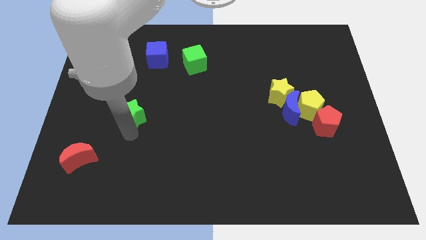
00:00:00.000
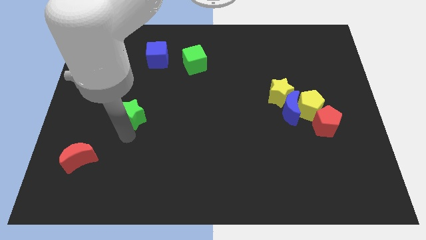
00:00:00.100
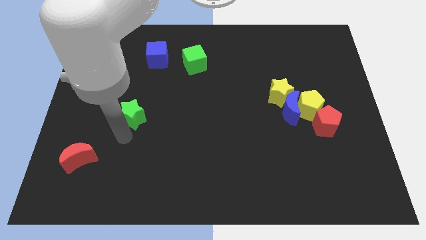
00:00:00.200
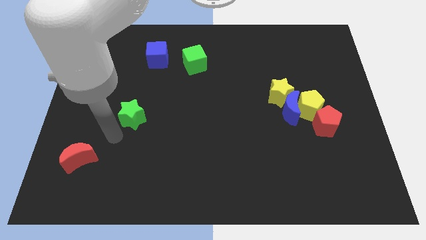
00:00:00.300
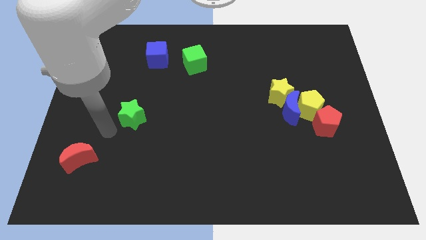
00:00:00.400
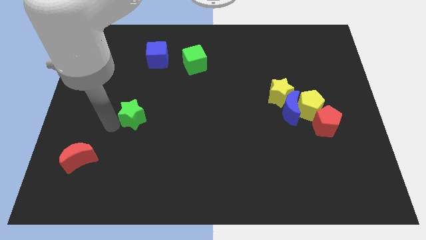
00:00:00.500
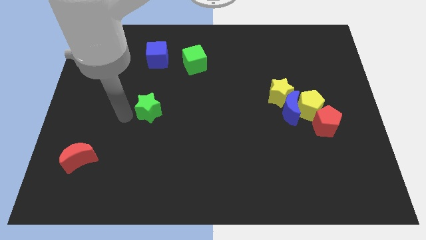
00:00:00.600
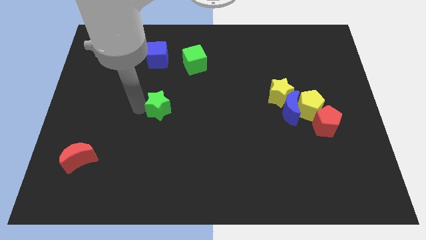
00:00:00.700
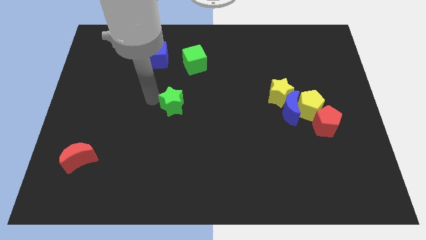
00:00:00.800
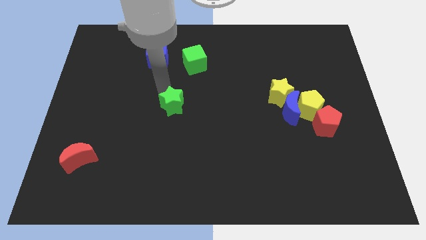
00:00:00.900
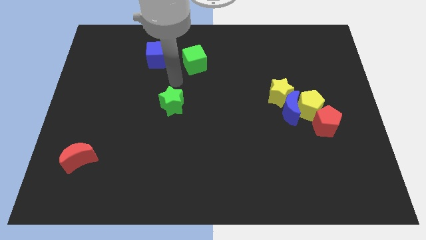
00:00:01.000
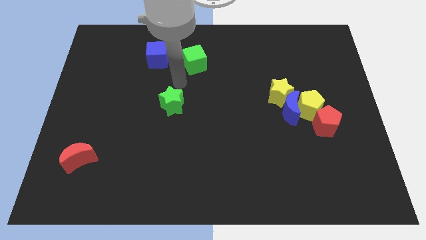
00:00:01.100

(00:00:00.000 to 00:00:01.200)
slightly move the green star to the center right side

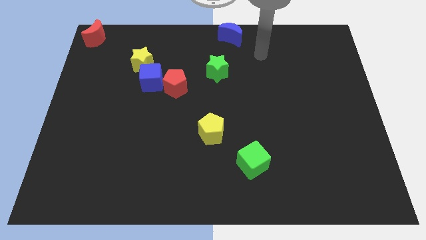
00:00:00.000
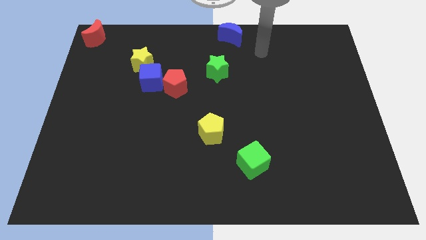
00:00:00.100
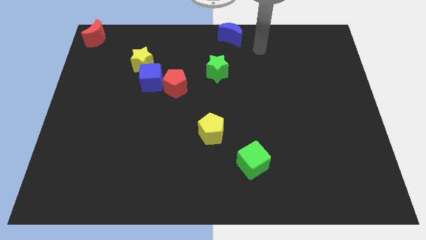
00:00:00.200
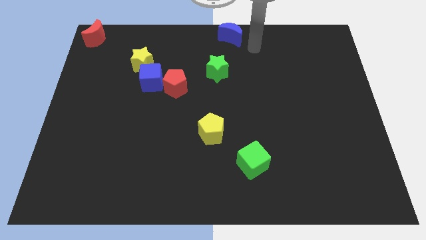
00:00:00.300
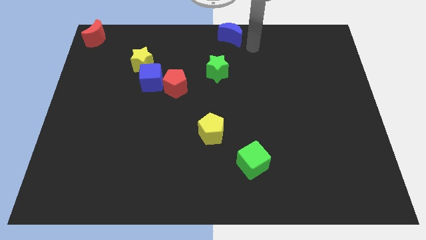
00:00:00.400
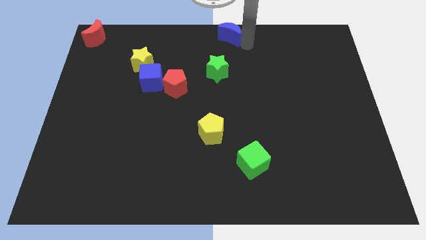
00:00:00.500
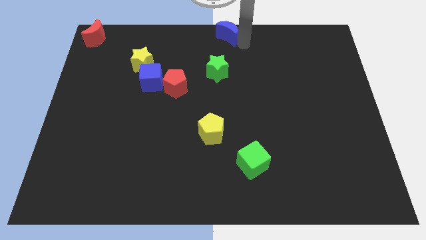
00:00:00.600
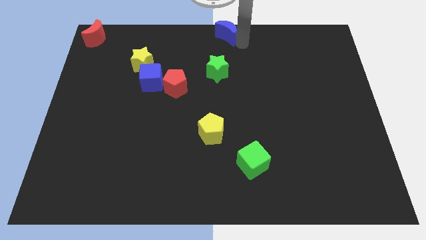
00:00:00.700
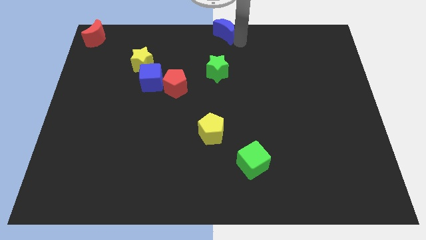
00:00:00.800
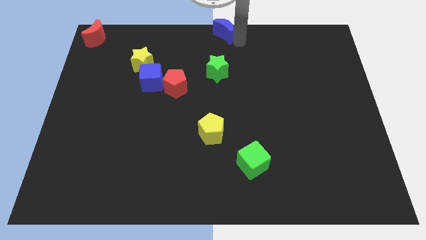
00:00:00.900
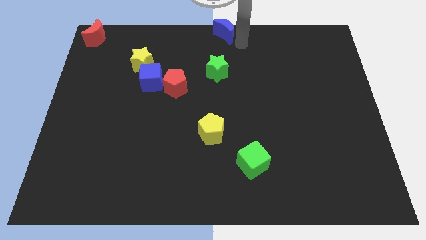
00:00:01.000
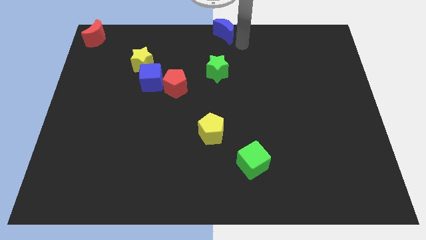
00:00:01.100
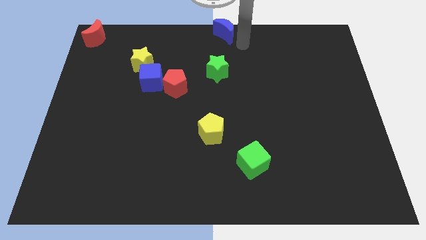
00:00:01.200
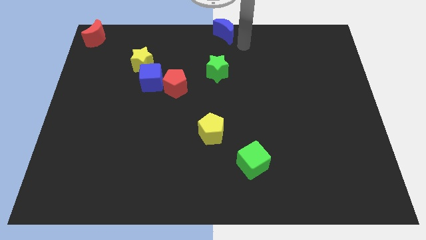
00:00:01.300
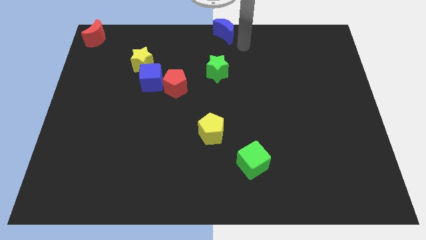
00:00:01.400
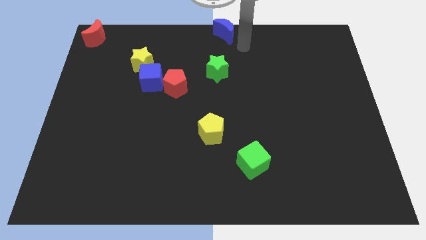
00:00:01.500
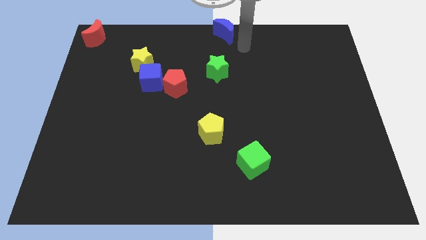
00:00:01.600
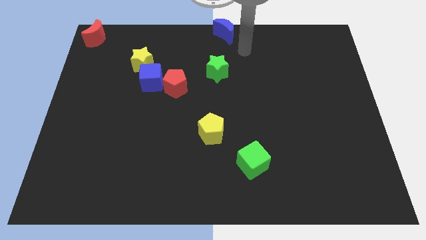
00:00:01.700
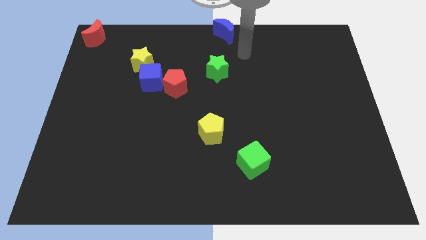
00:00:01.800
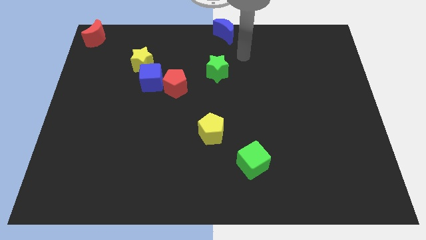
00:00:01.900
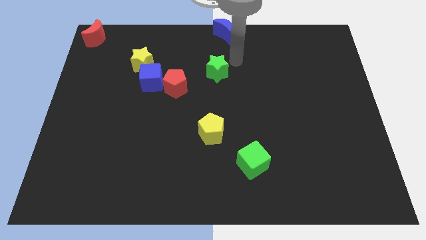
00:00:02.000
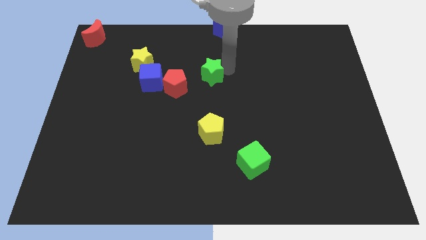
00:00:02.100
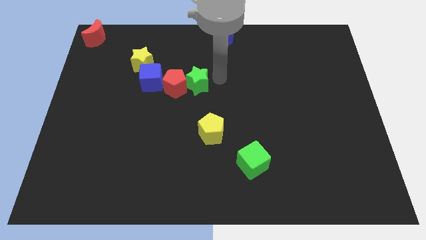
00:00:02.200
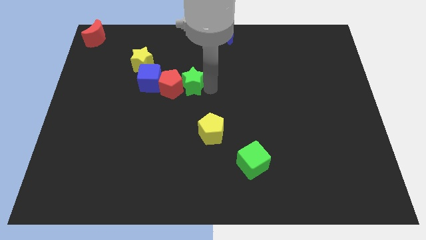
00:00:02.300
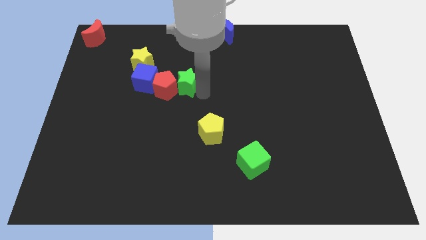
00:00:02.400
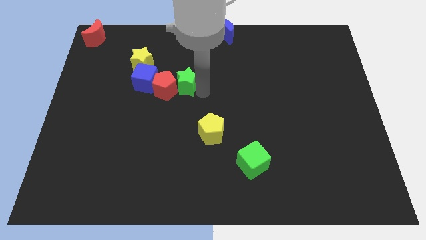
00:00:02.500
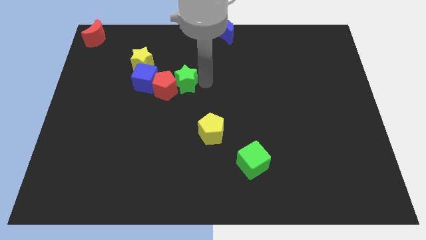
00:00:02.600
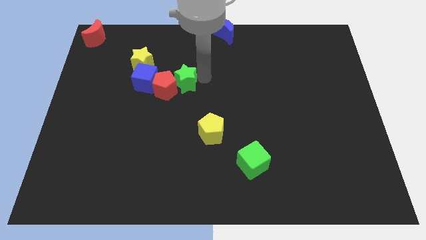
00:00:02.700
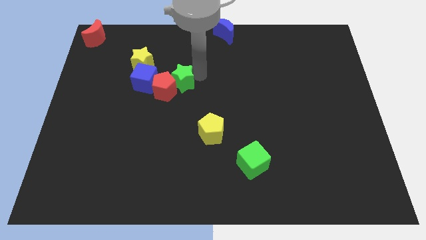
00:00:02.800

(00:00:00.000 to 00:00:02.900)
push green star into red pentagon

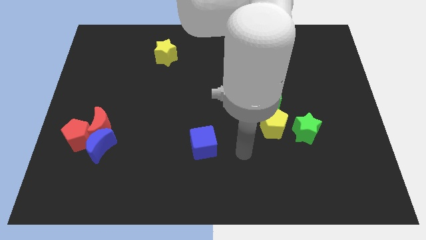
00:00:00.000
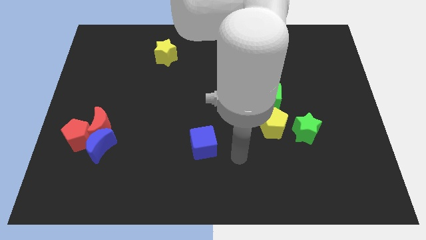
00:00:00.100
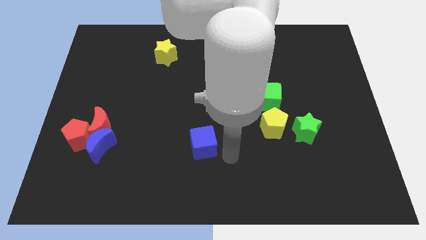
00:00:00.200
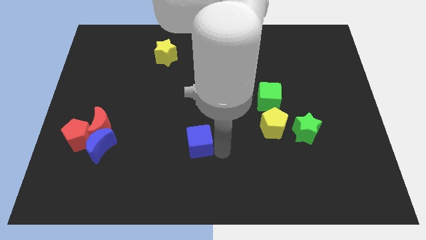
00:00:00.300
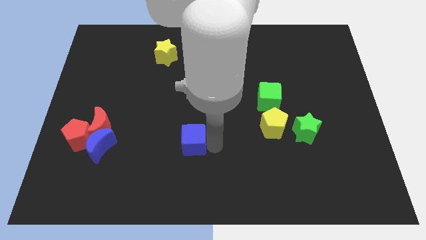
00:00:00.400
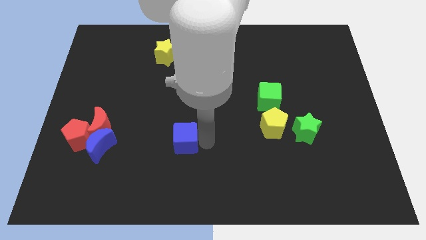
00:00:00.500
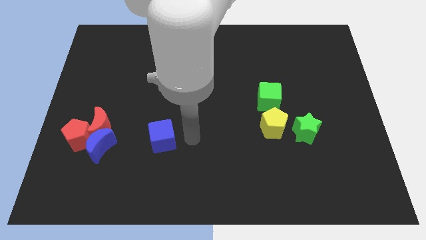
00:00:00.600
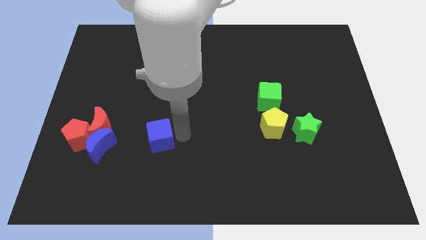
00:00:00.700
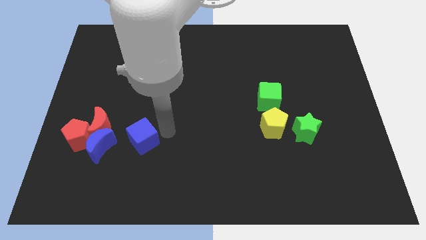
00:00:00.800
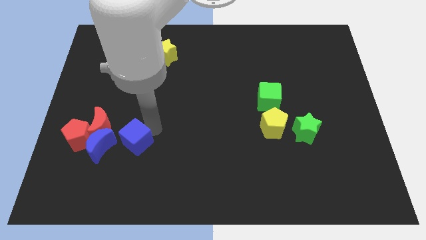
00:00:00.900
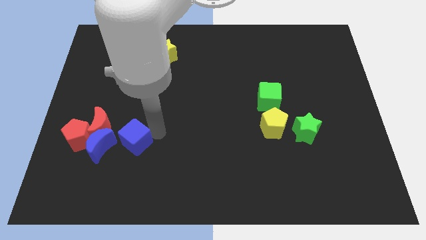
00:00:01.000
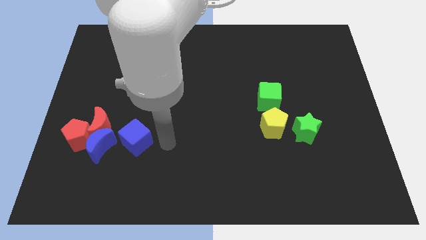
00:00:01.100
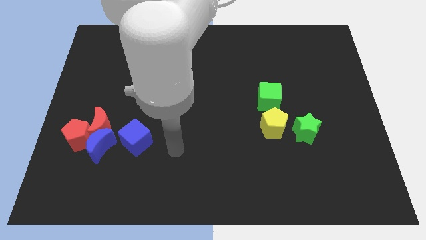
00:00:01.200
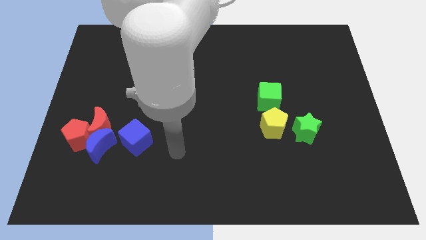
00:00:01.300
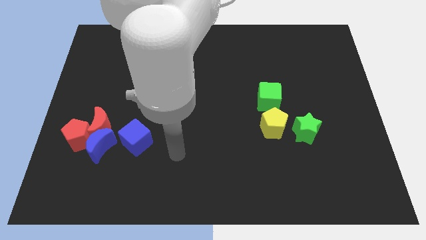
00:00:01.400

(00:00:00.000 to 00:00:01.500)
push the blue cube into the blue crescent

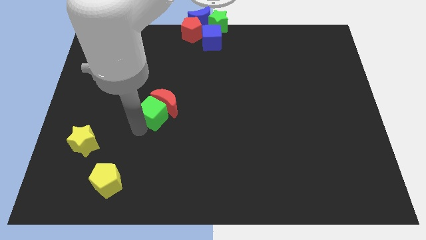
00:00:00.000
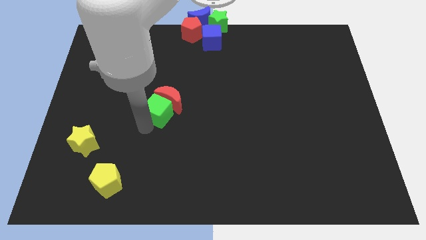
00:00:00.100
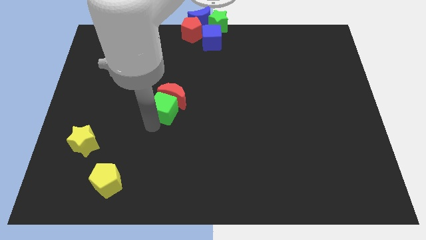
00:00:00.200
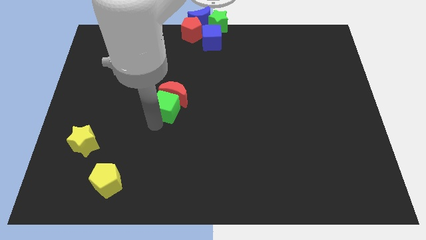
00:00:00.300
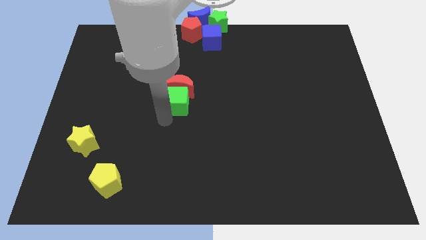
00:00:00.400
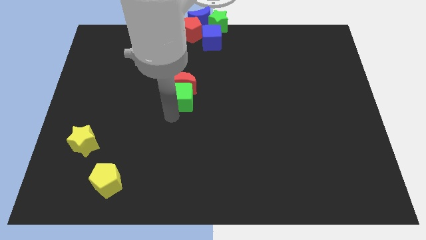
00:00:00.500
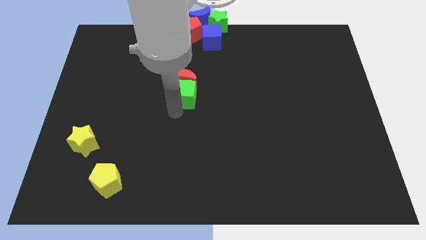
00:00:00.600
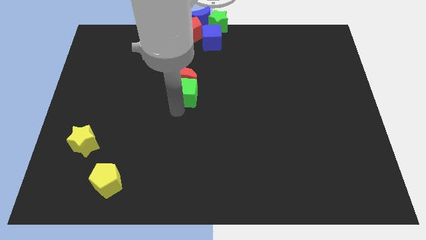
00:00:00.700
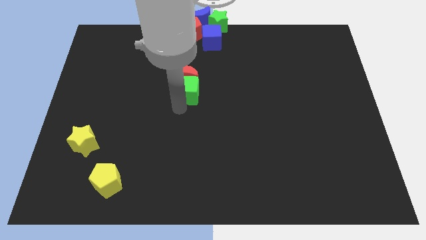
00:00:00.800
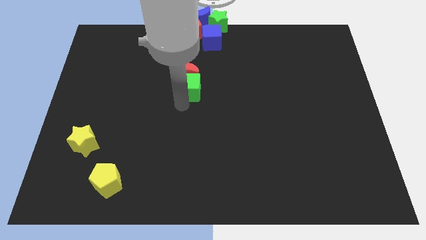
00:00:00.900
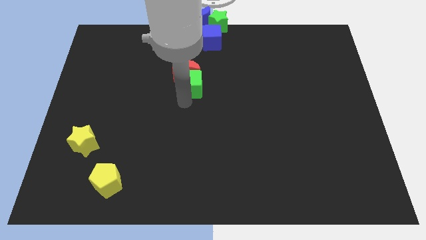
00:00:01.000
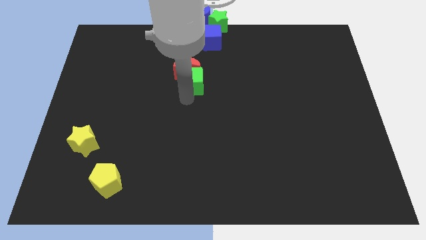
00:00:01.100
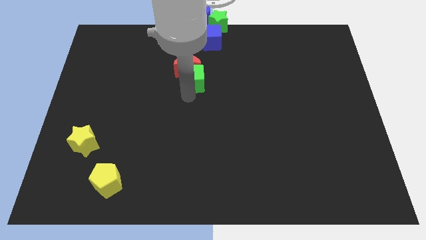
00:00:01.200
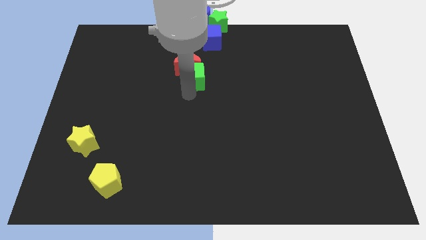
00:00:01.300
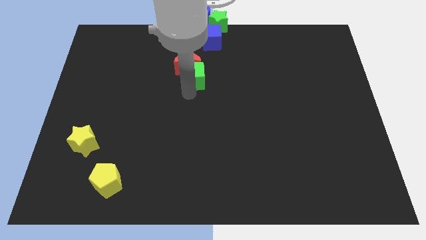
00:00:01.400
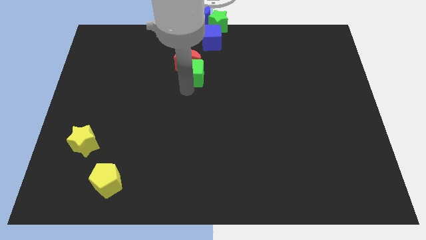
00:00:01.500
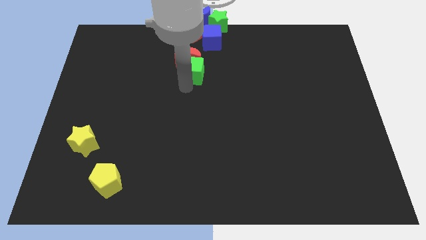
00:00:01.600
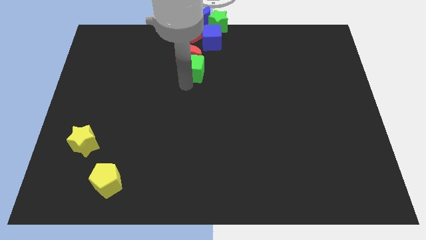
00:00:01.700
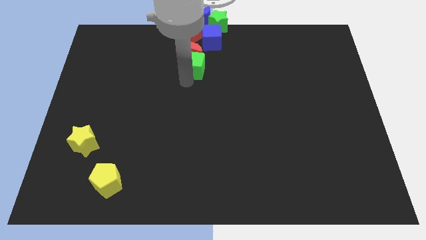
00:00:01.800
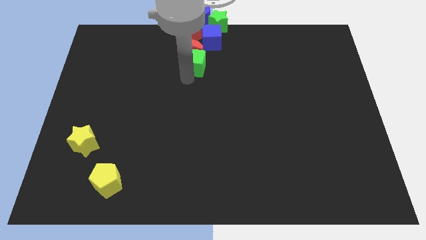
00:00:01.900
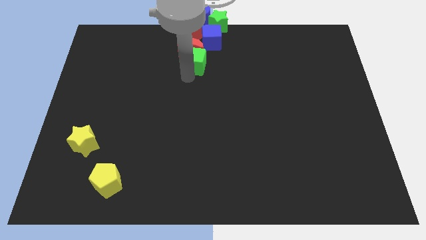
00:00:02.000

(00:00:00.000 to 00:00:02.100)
put the green cube and the red moon vertically below the red pentagon

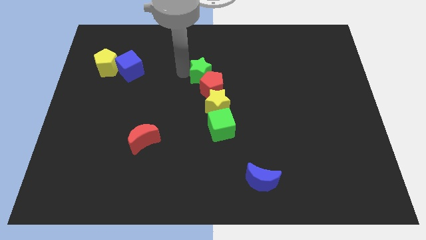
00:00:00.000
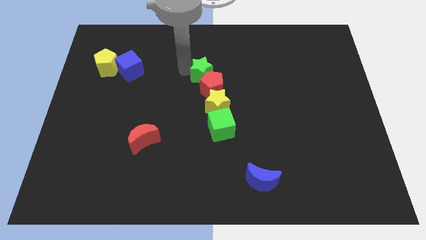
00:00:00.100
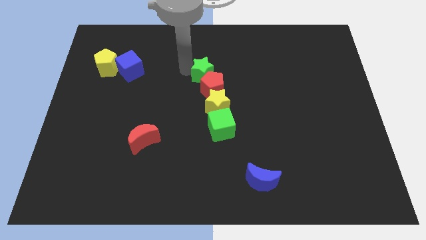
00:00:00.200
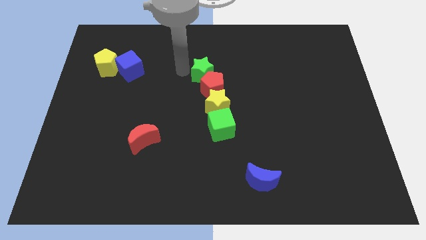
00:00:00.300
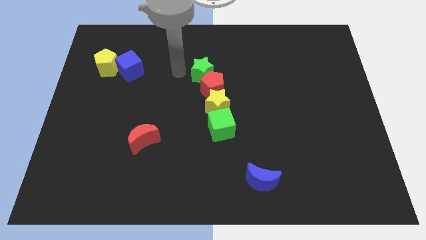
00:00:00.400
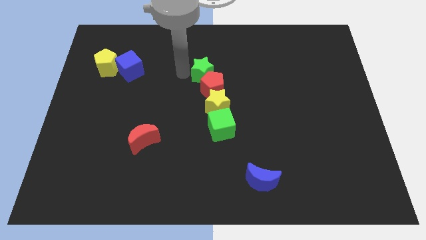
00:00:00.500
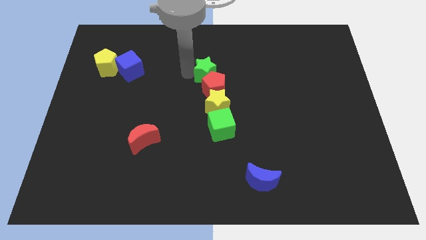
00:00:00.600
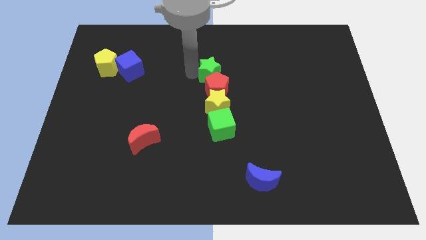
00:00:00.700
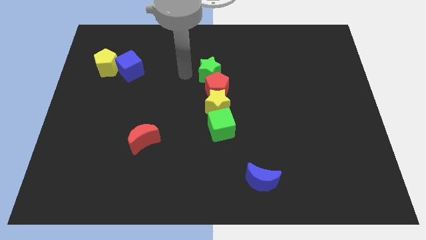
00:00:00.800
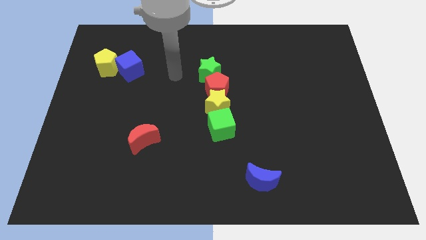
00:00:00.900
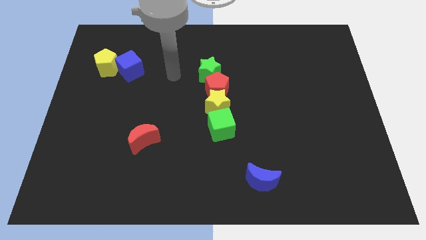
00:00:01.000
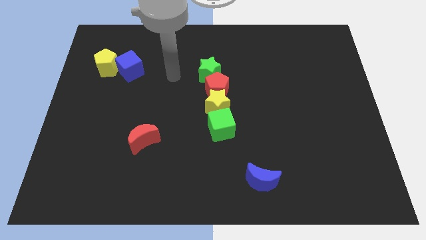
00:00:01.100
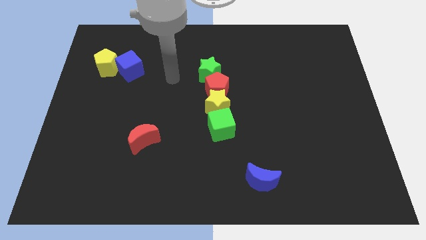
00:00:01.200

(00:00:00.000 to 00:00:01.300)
place the green star above the red pentagon
